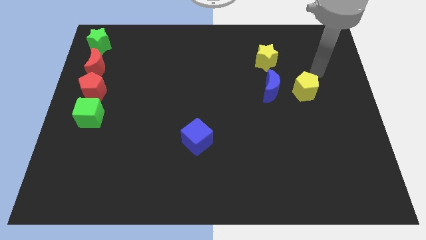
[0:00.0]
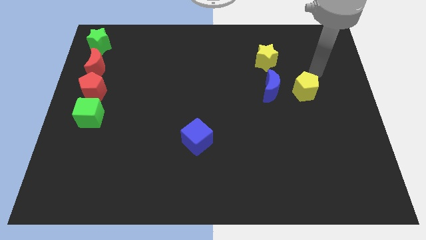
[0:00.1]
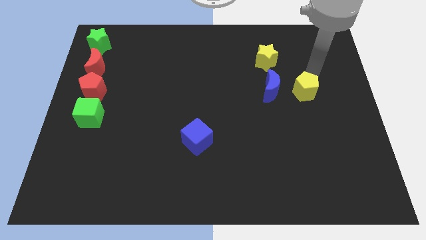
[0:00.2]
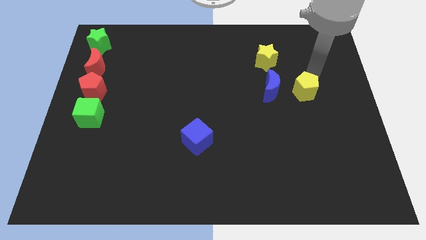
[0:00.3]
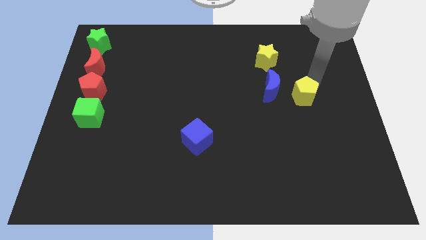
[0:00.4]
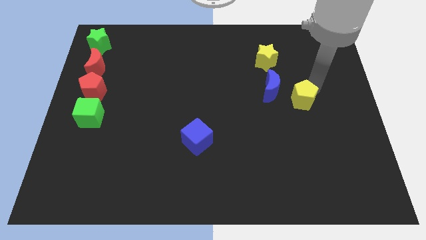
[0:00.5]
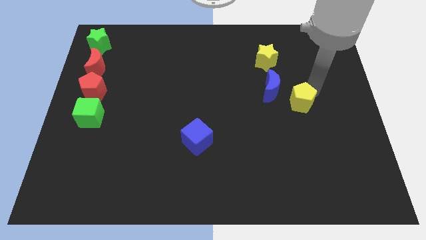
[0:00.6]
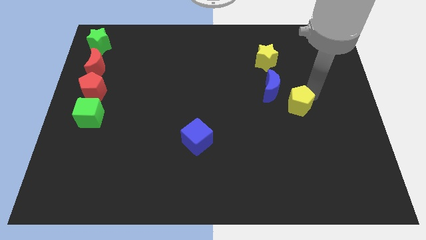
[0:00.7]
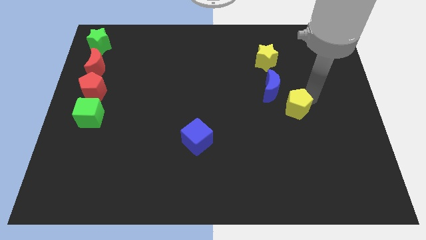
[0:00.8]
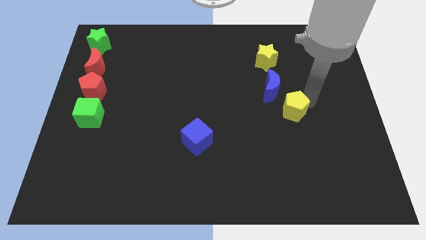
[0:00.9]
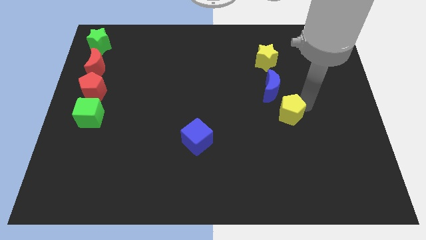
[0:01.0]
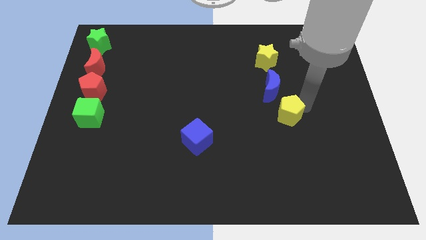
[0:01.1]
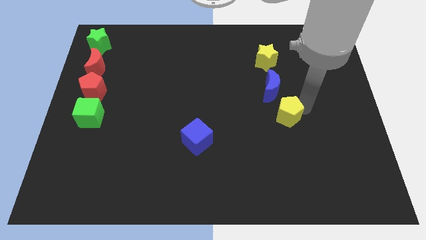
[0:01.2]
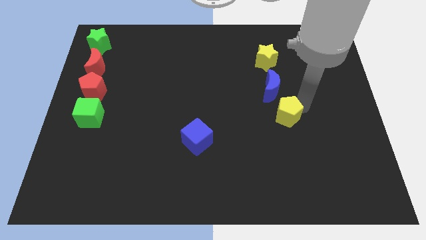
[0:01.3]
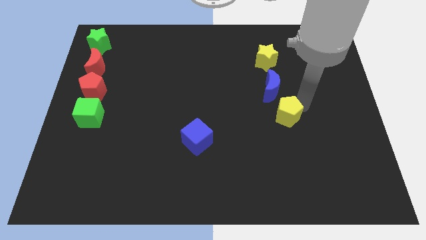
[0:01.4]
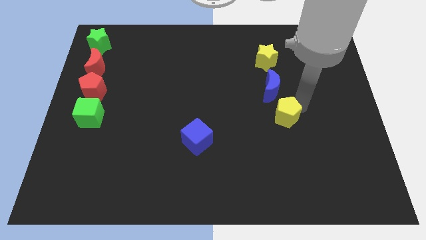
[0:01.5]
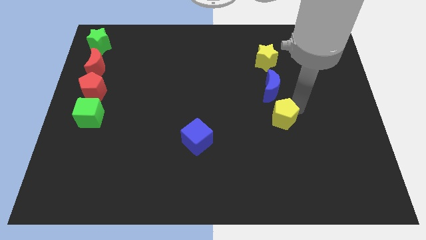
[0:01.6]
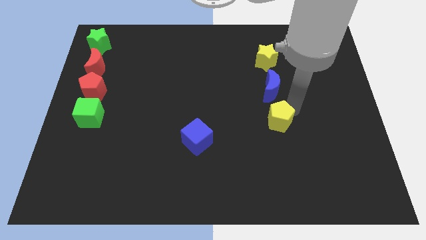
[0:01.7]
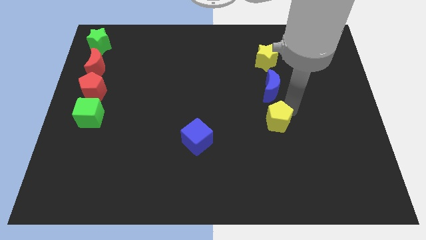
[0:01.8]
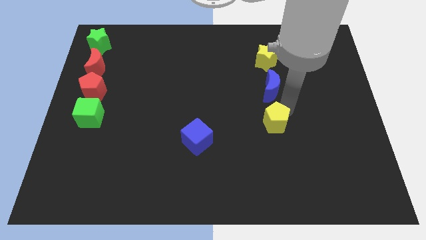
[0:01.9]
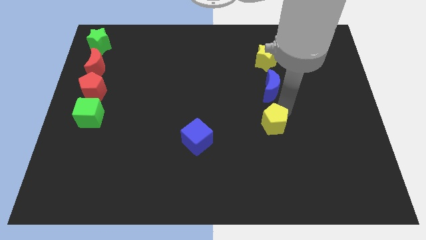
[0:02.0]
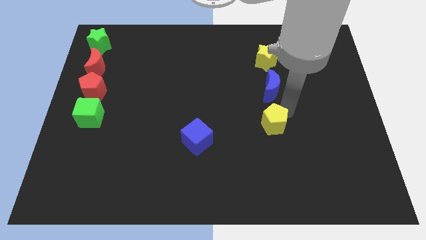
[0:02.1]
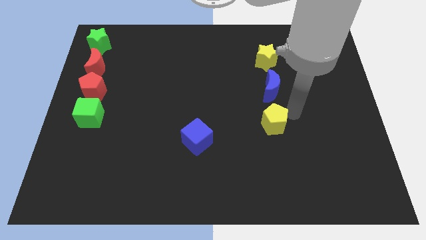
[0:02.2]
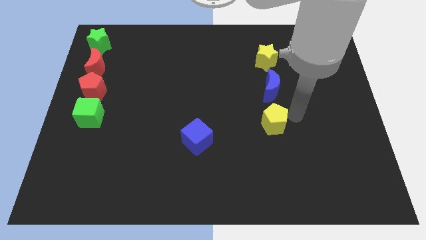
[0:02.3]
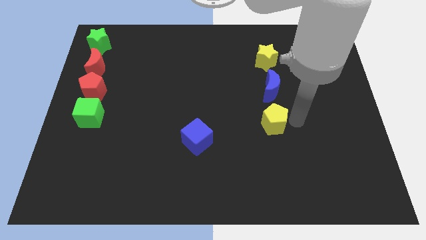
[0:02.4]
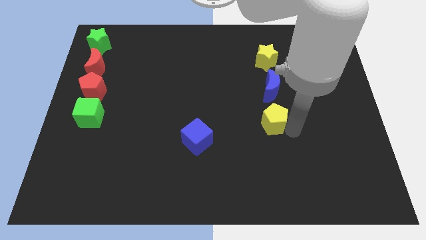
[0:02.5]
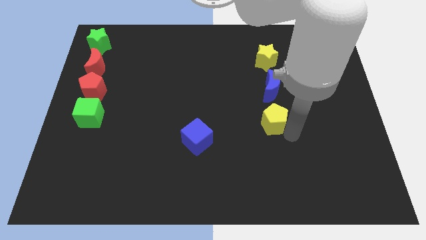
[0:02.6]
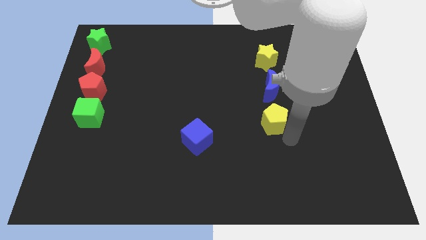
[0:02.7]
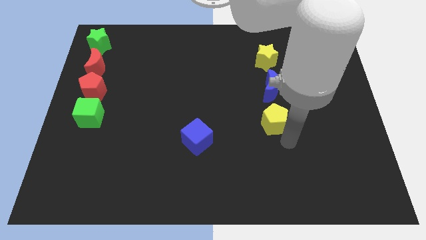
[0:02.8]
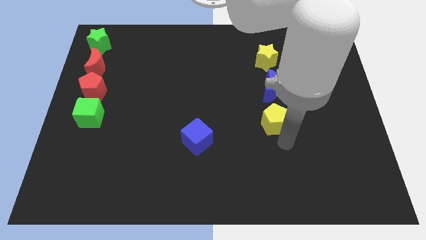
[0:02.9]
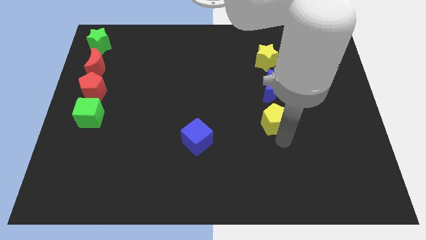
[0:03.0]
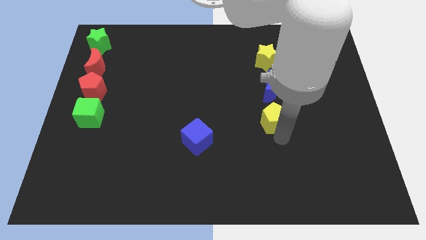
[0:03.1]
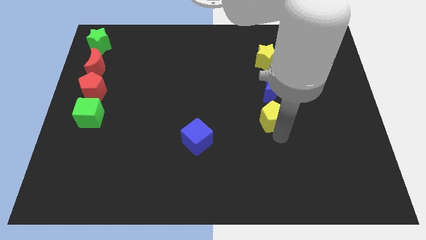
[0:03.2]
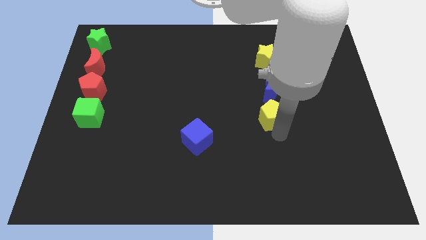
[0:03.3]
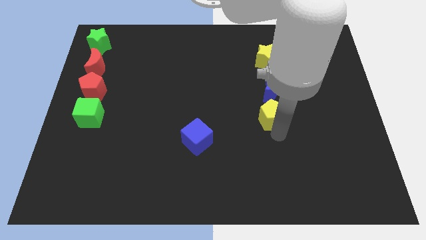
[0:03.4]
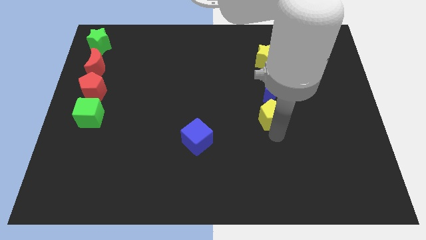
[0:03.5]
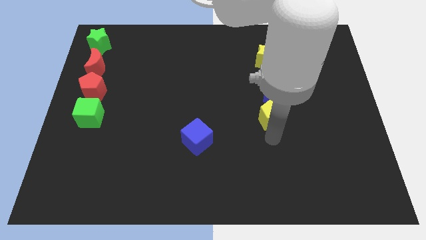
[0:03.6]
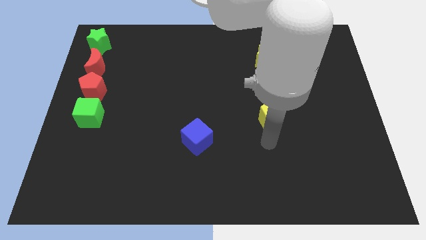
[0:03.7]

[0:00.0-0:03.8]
place yellow pentagon below blue crescent

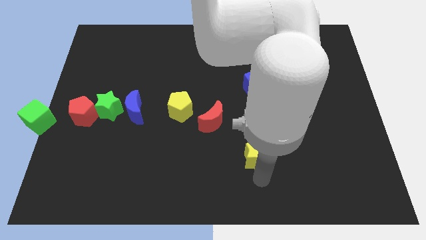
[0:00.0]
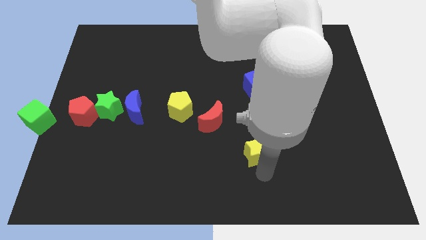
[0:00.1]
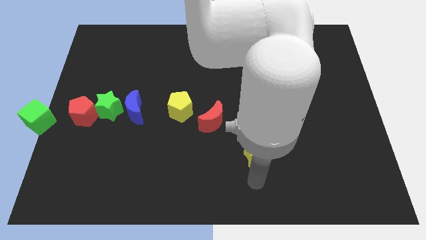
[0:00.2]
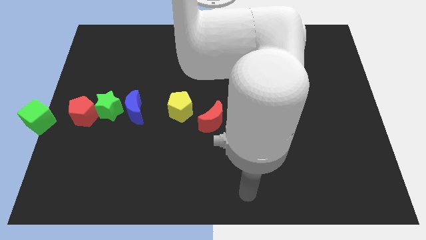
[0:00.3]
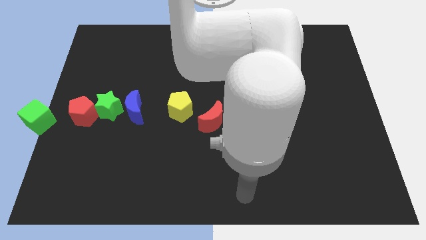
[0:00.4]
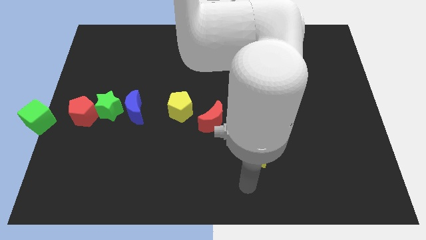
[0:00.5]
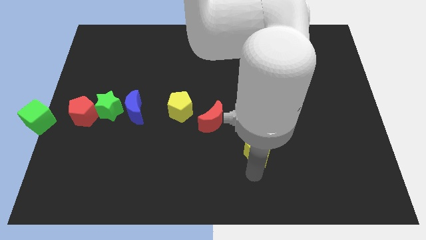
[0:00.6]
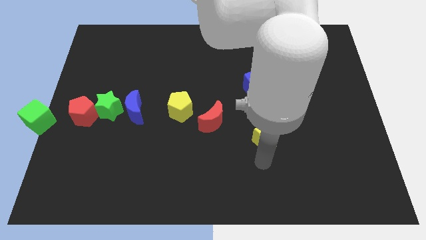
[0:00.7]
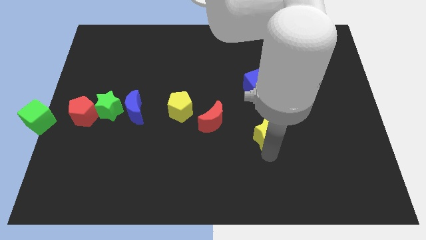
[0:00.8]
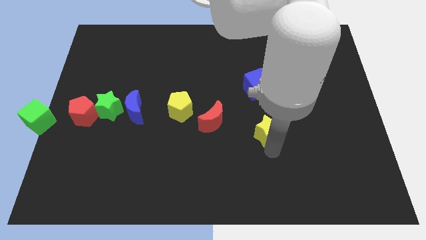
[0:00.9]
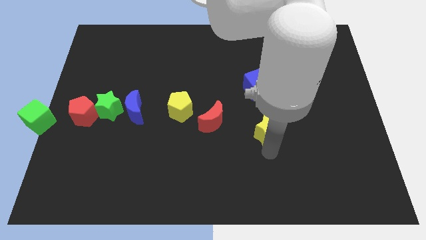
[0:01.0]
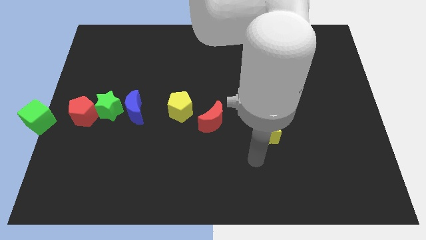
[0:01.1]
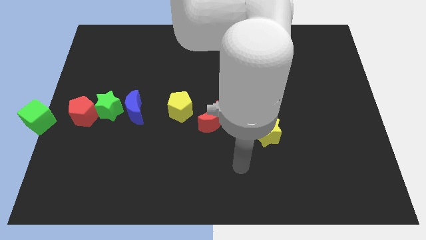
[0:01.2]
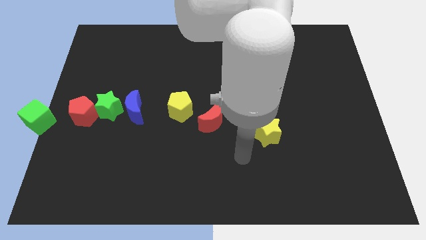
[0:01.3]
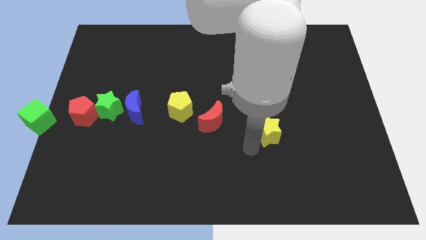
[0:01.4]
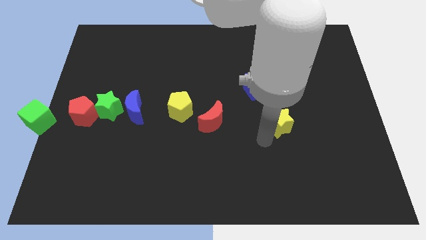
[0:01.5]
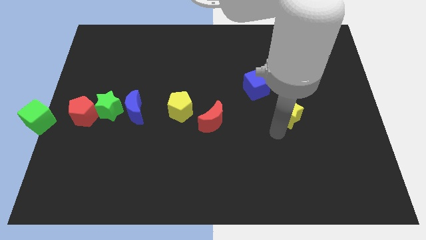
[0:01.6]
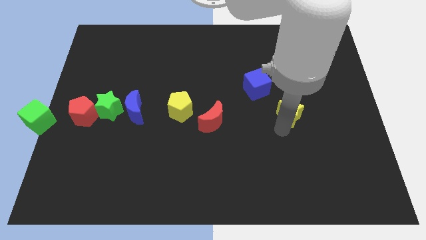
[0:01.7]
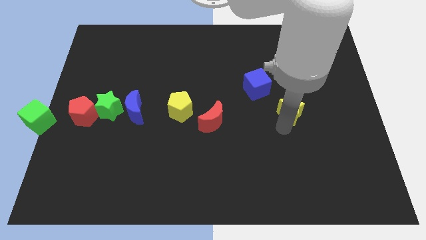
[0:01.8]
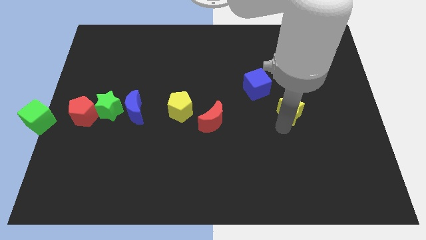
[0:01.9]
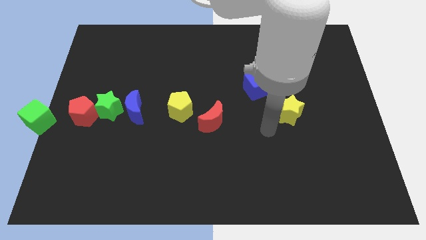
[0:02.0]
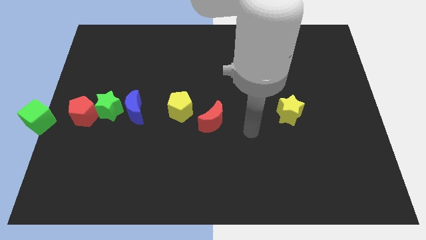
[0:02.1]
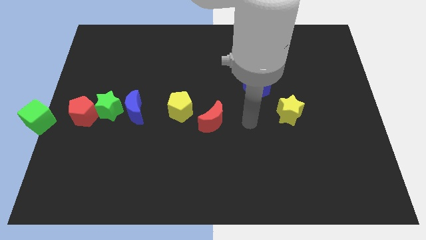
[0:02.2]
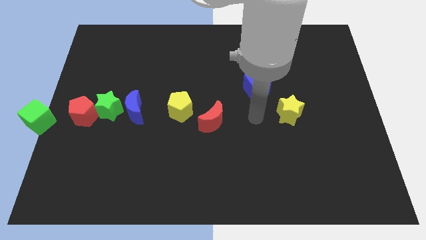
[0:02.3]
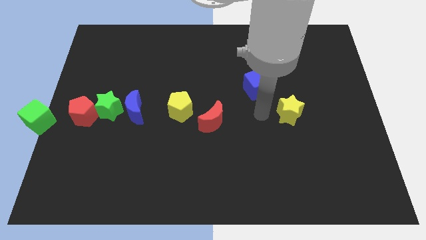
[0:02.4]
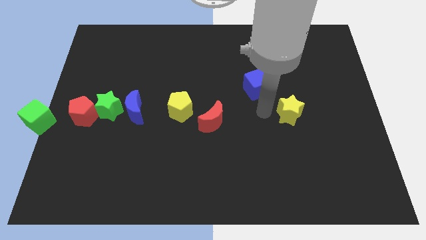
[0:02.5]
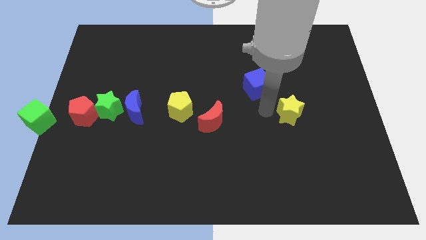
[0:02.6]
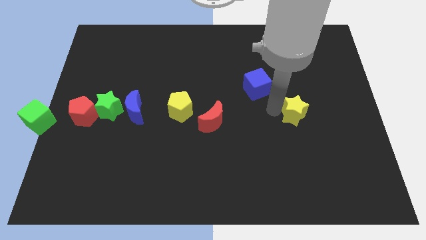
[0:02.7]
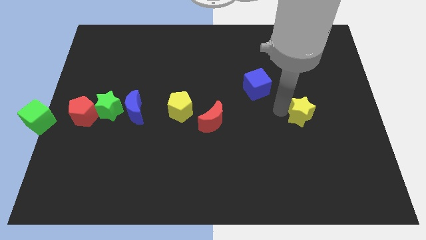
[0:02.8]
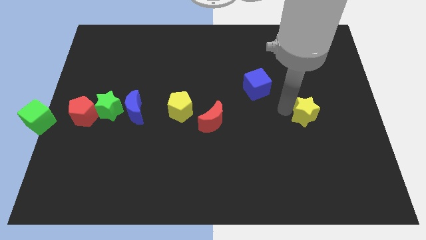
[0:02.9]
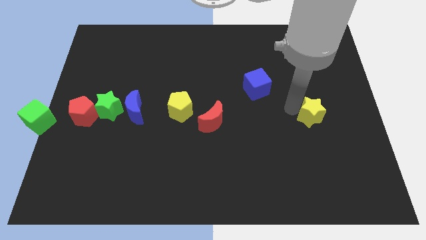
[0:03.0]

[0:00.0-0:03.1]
place the yellow star to the center right of the board

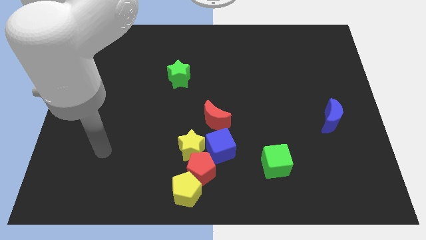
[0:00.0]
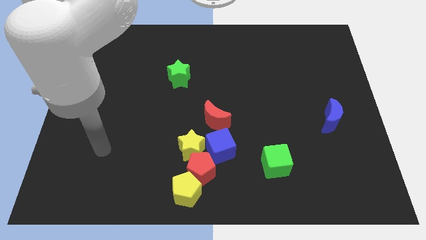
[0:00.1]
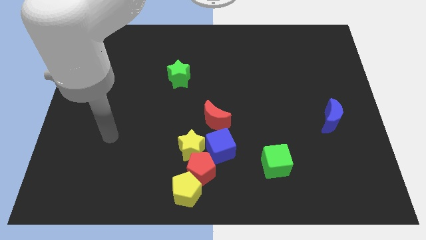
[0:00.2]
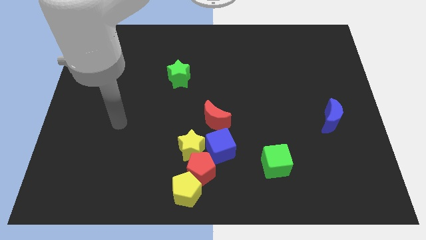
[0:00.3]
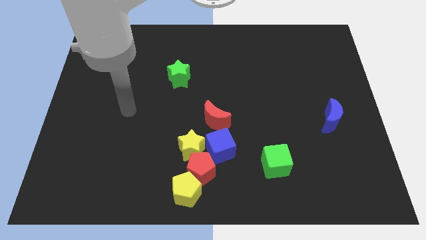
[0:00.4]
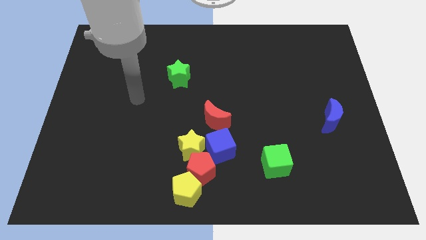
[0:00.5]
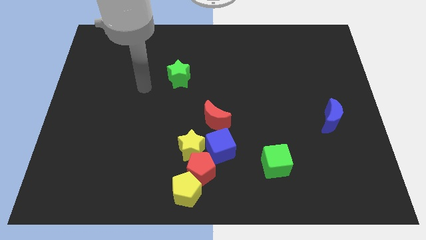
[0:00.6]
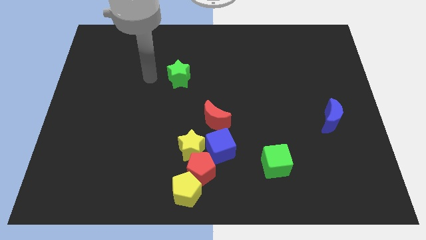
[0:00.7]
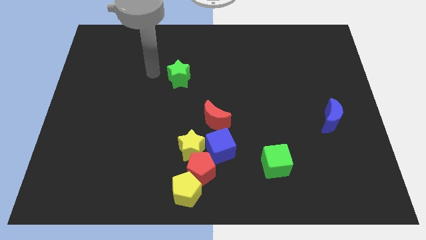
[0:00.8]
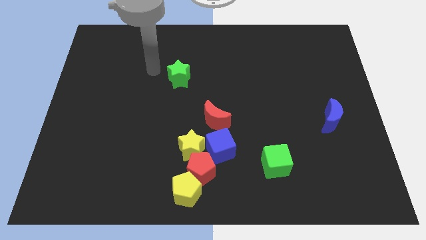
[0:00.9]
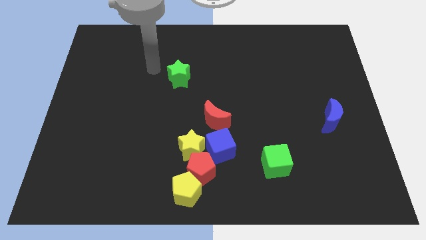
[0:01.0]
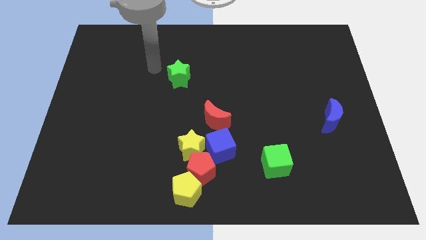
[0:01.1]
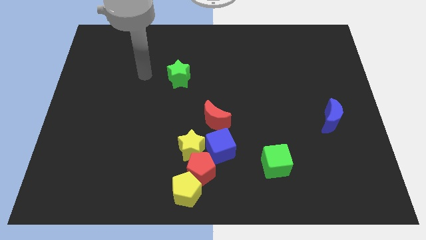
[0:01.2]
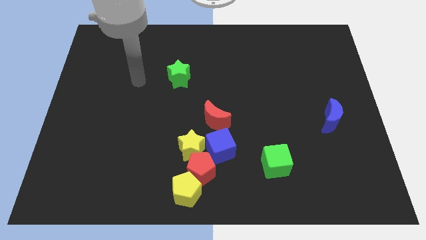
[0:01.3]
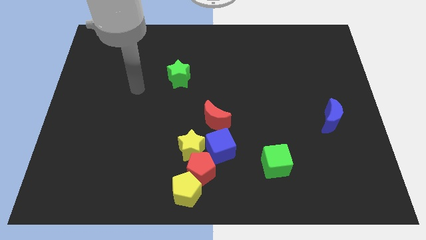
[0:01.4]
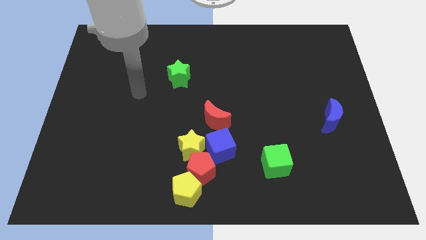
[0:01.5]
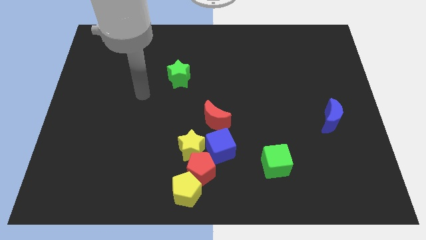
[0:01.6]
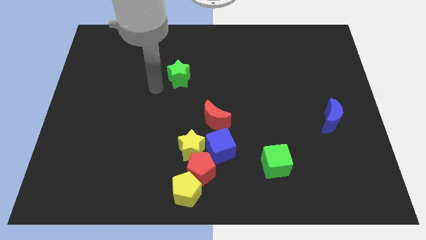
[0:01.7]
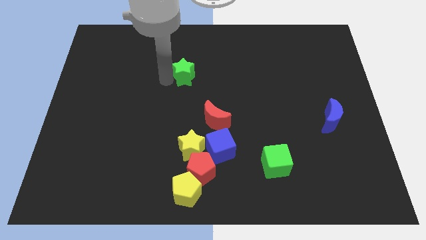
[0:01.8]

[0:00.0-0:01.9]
move arm towards the green star

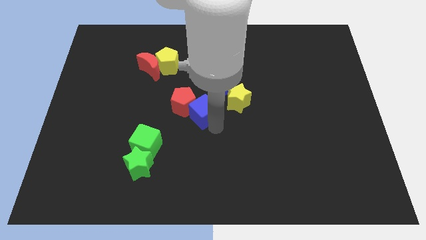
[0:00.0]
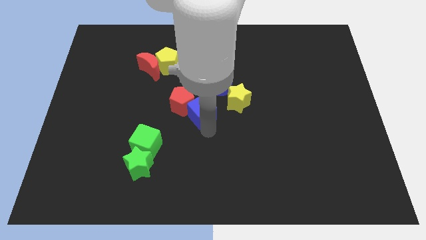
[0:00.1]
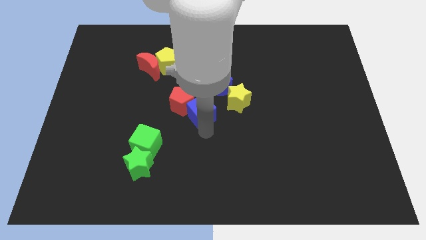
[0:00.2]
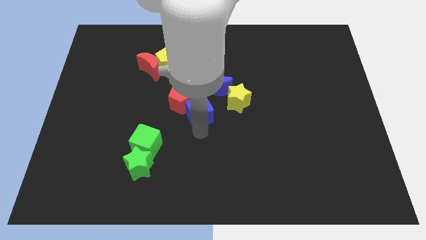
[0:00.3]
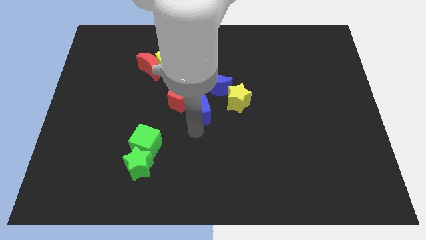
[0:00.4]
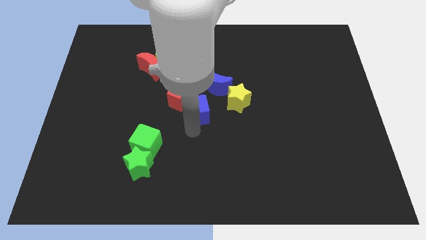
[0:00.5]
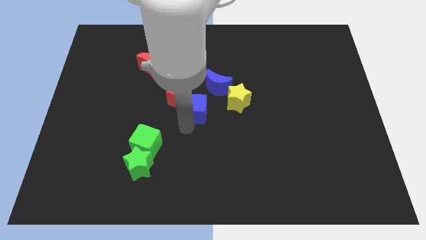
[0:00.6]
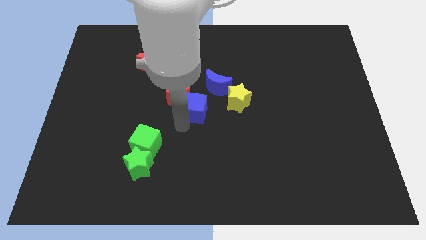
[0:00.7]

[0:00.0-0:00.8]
move the blue cube close to the red pentagon
